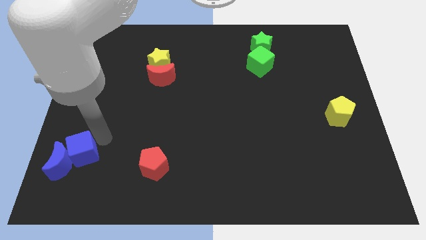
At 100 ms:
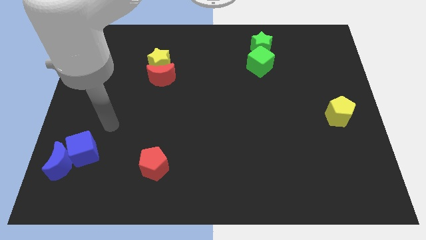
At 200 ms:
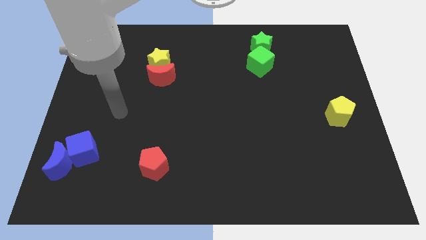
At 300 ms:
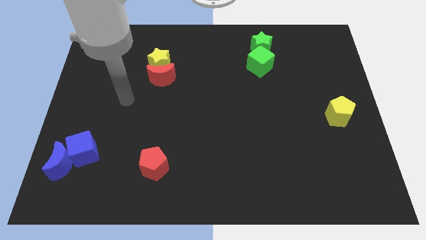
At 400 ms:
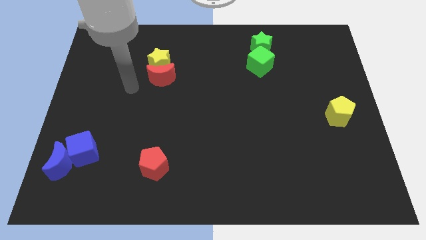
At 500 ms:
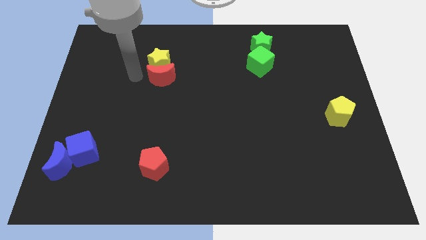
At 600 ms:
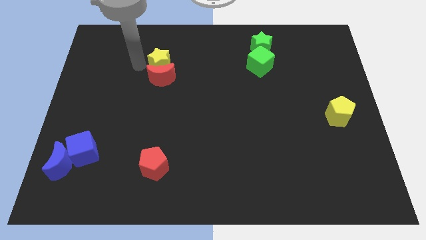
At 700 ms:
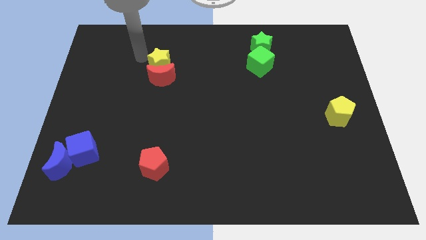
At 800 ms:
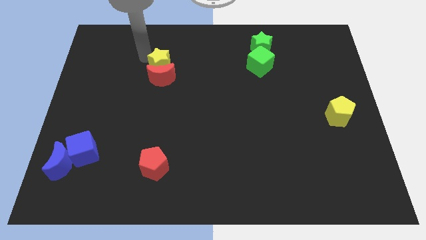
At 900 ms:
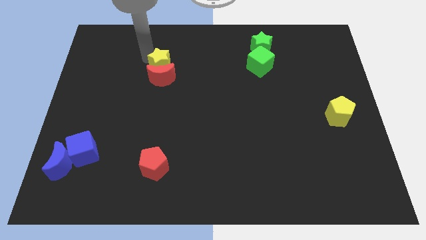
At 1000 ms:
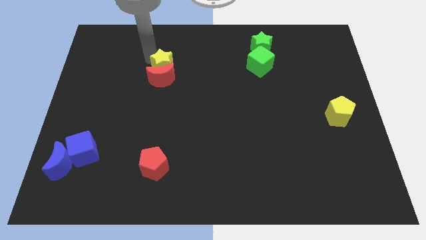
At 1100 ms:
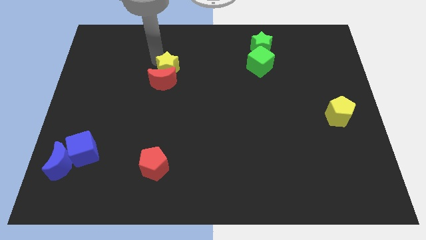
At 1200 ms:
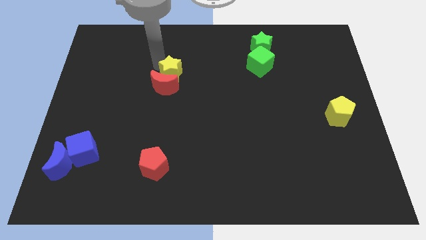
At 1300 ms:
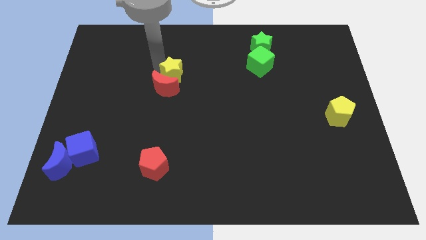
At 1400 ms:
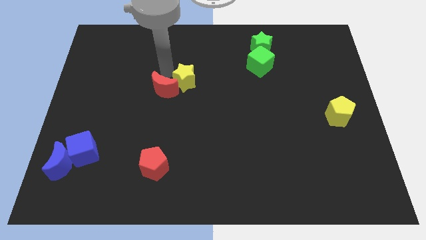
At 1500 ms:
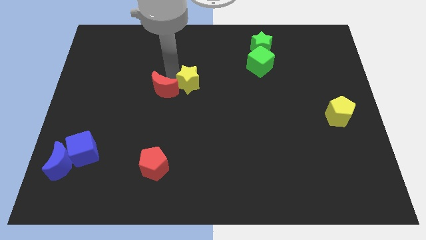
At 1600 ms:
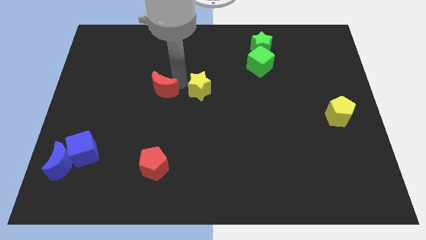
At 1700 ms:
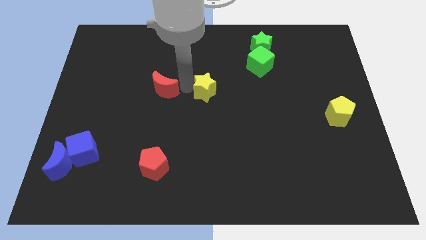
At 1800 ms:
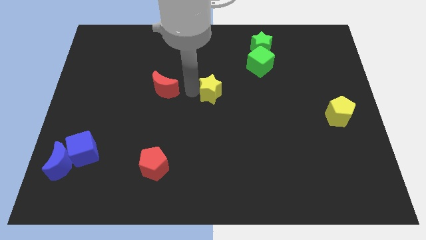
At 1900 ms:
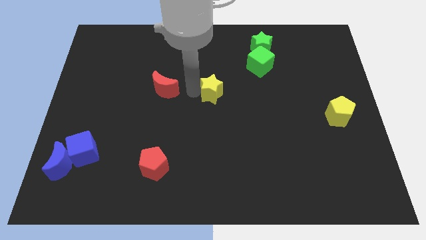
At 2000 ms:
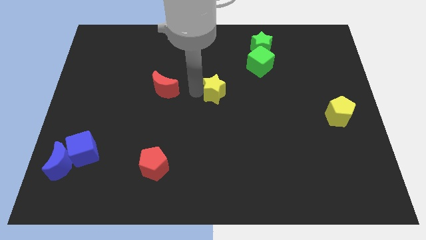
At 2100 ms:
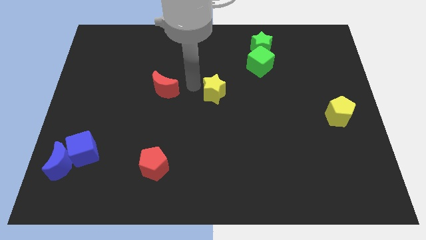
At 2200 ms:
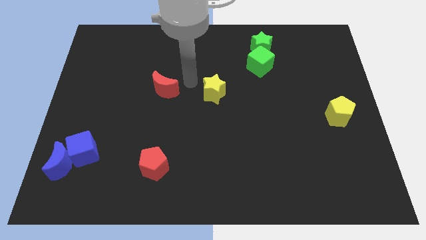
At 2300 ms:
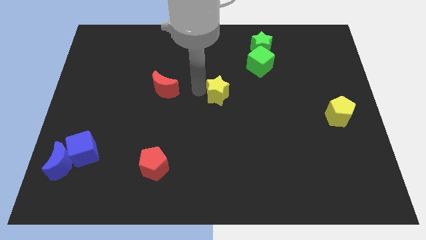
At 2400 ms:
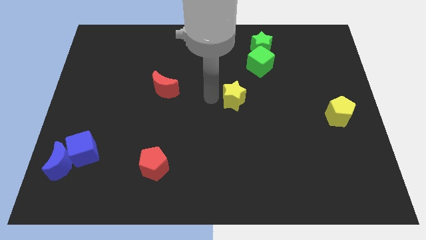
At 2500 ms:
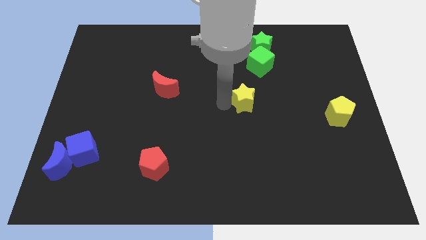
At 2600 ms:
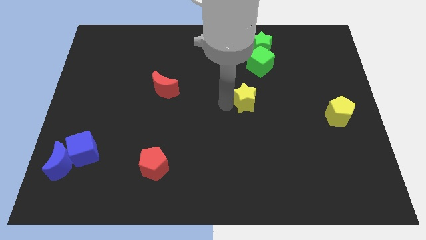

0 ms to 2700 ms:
place the yellow star right to the red moon

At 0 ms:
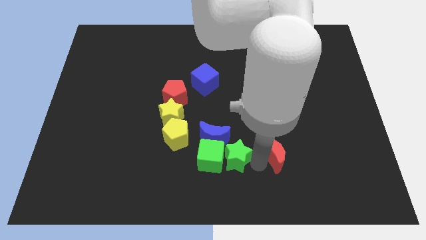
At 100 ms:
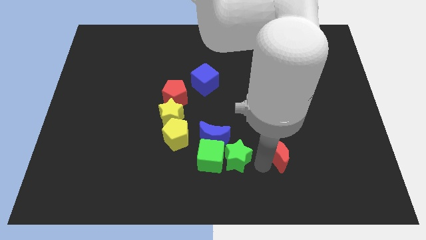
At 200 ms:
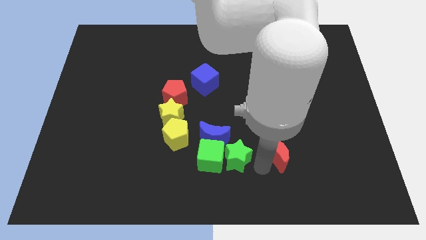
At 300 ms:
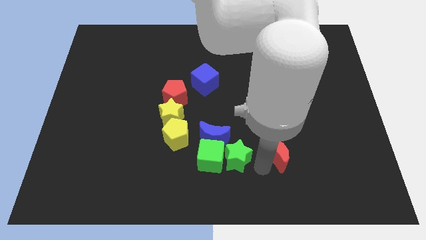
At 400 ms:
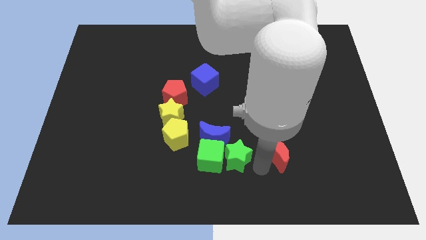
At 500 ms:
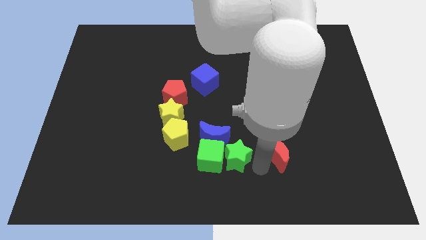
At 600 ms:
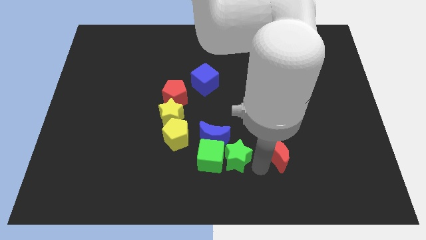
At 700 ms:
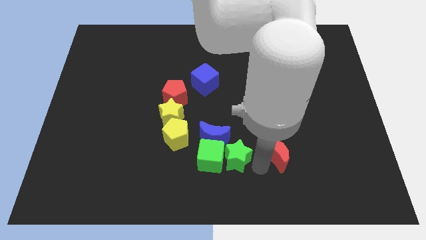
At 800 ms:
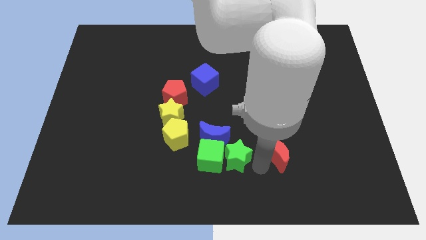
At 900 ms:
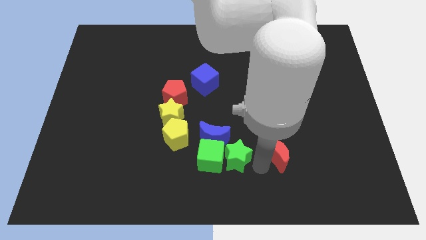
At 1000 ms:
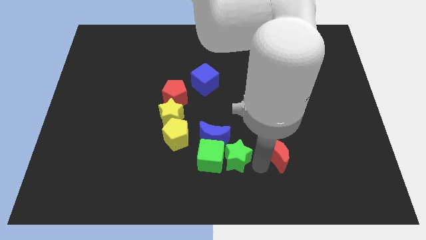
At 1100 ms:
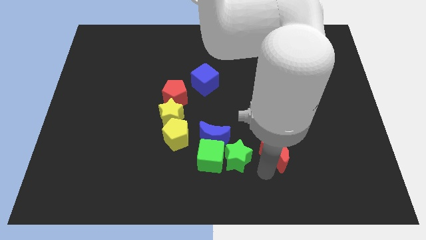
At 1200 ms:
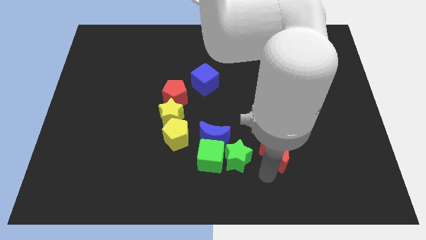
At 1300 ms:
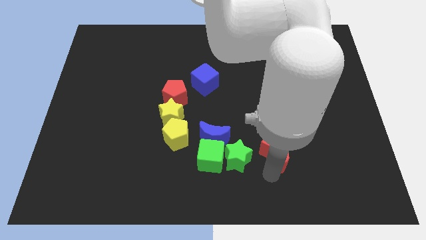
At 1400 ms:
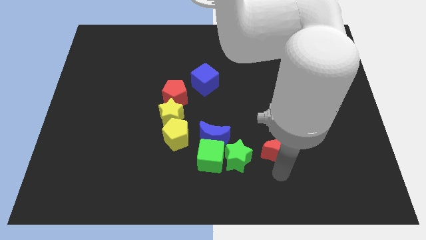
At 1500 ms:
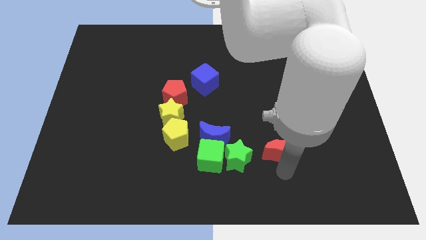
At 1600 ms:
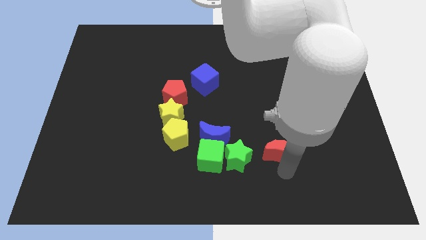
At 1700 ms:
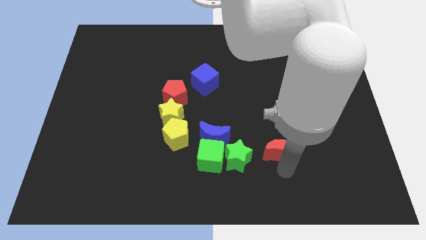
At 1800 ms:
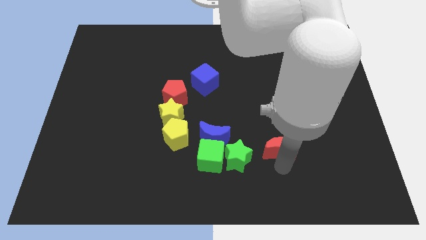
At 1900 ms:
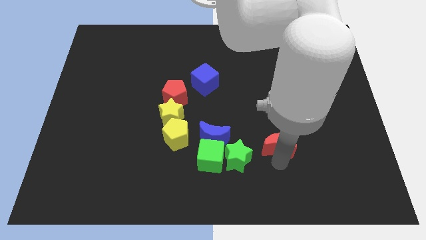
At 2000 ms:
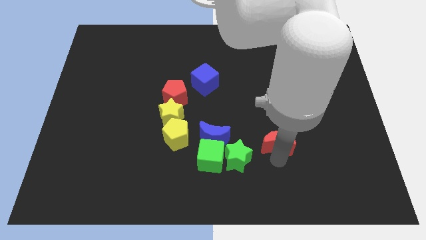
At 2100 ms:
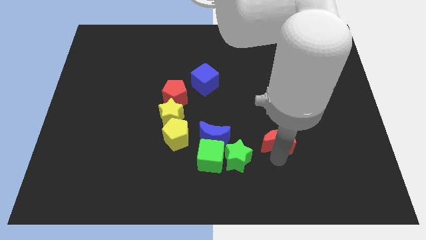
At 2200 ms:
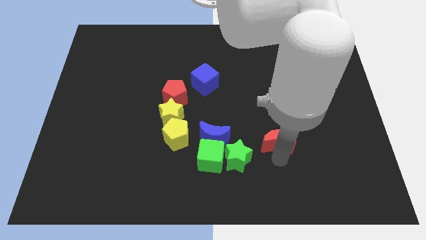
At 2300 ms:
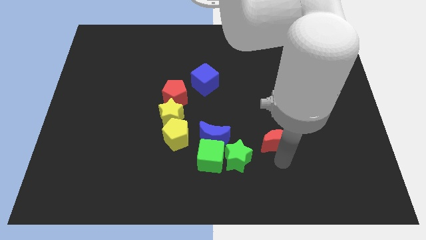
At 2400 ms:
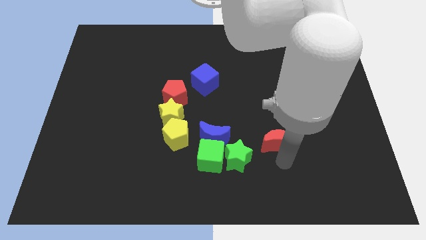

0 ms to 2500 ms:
separate red moon from star

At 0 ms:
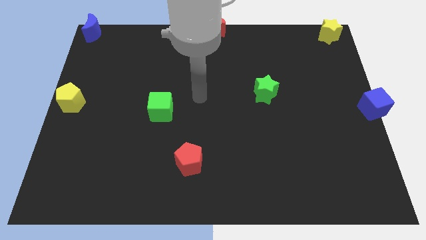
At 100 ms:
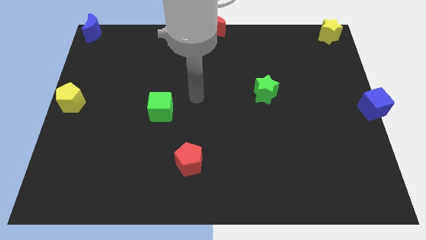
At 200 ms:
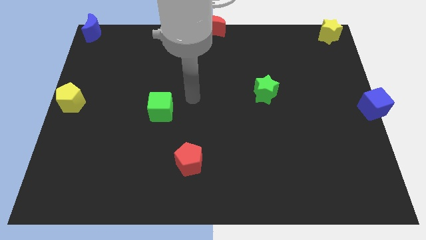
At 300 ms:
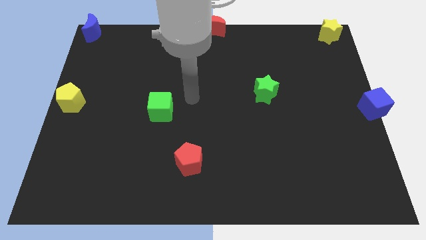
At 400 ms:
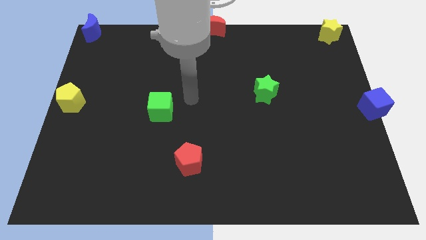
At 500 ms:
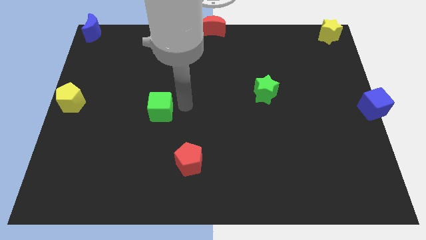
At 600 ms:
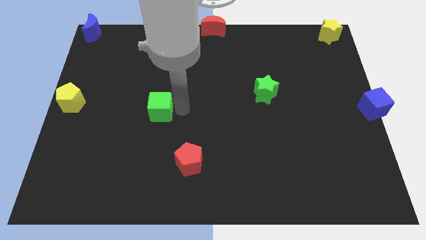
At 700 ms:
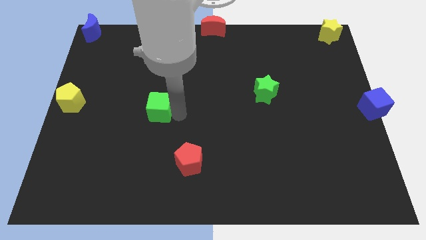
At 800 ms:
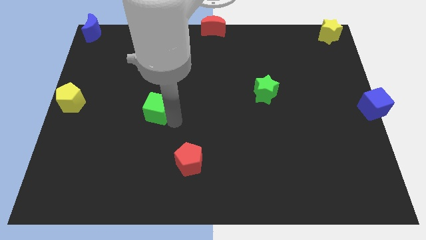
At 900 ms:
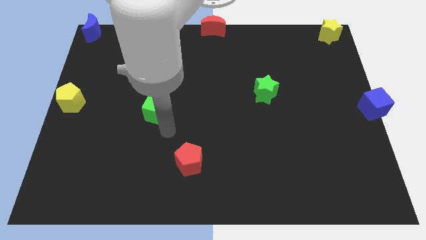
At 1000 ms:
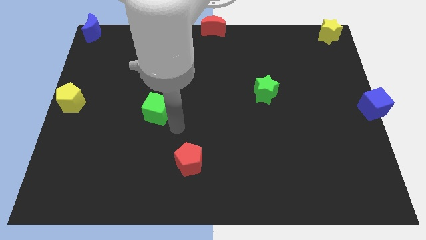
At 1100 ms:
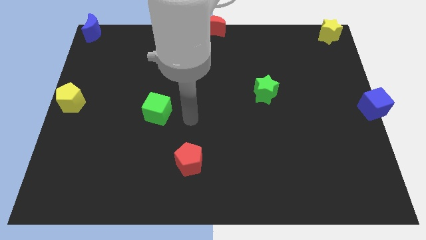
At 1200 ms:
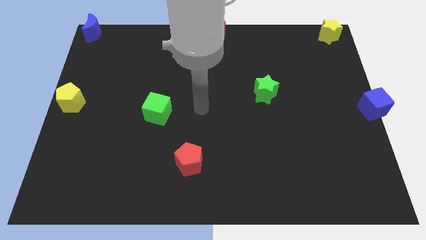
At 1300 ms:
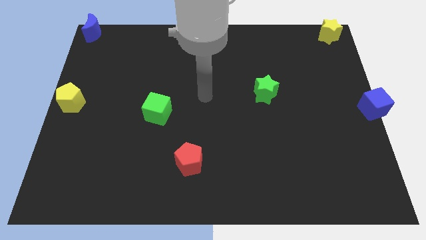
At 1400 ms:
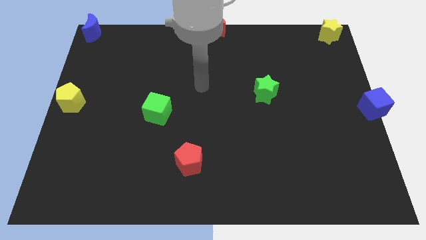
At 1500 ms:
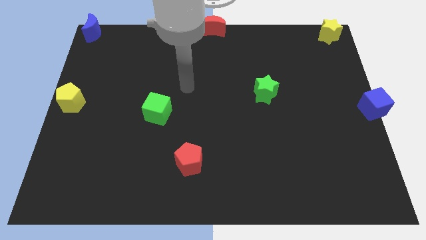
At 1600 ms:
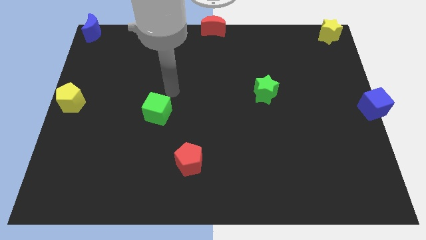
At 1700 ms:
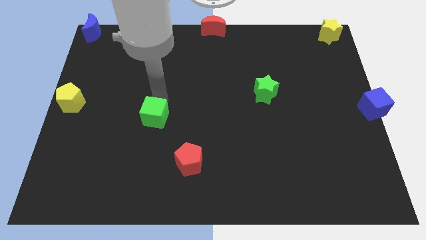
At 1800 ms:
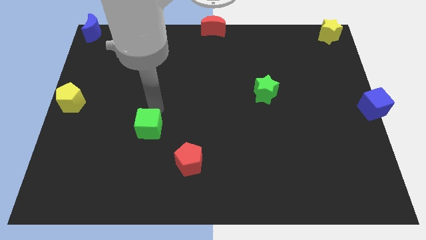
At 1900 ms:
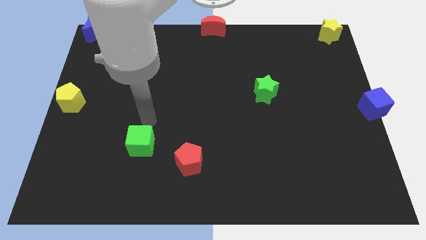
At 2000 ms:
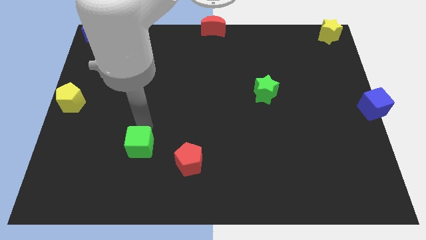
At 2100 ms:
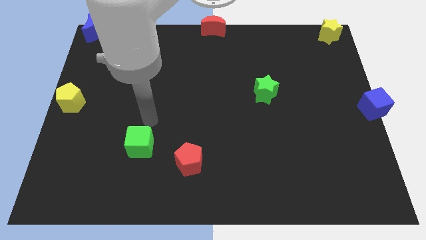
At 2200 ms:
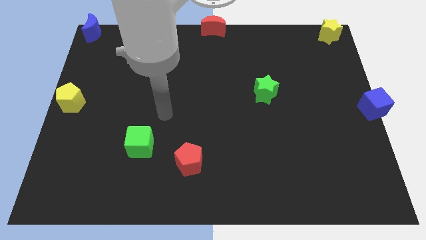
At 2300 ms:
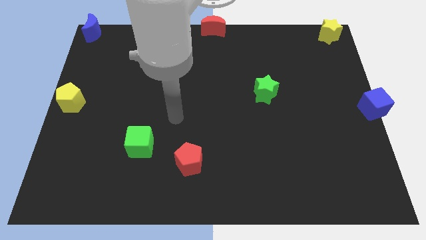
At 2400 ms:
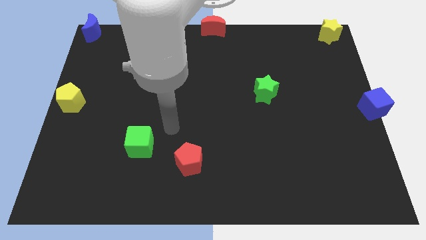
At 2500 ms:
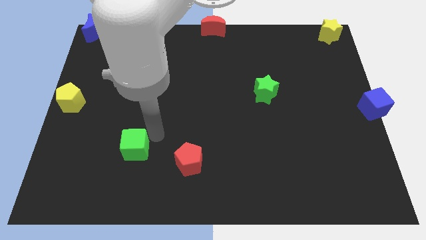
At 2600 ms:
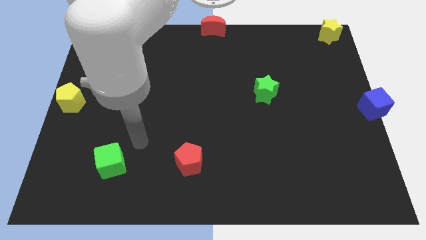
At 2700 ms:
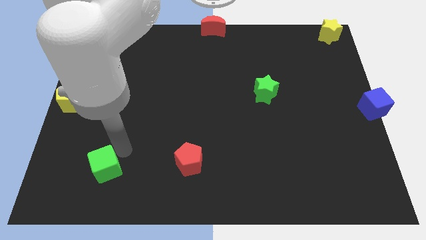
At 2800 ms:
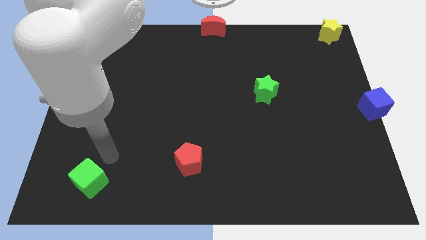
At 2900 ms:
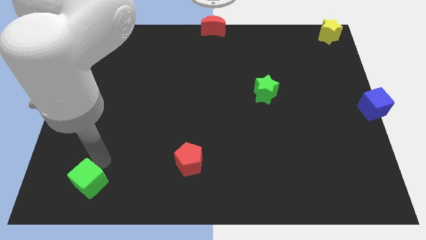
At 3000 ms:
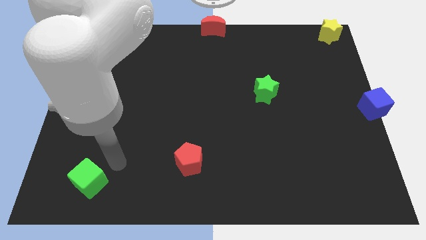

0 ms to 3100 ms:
push green cube towards bottom left

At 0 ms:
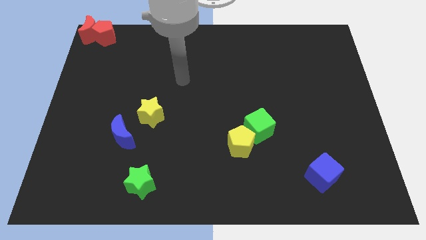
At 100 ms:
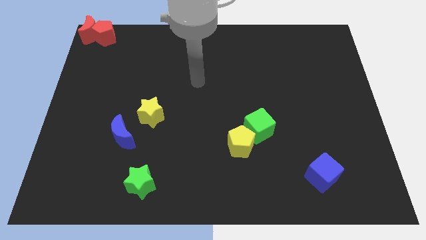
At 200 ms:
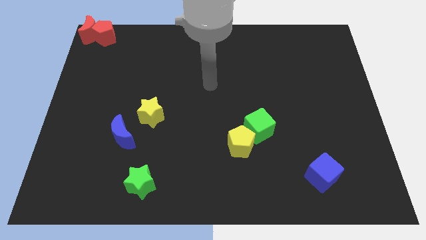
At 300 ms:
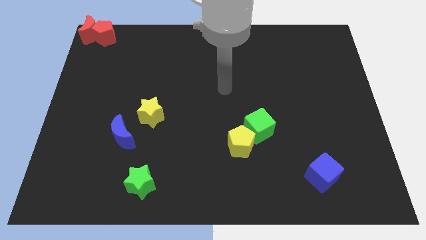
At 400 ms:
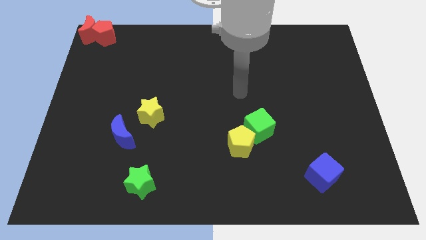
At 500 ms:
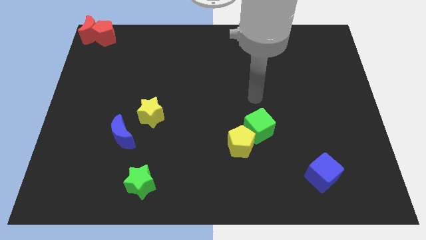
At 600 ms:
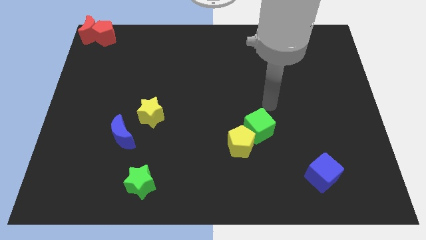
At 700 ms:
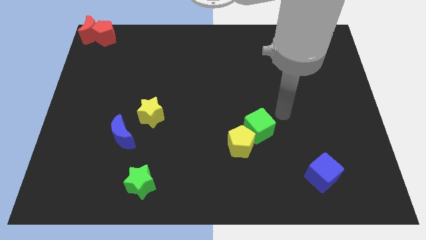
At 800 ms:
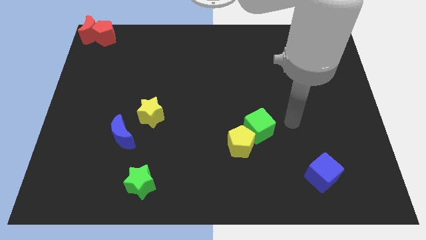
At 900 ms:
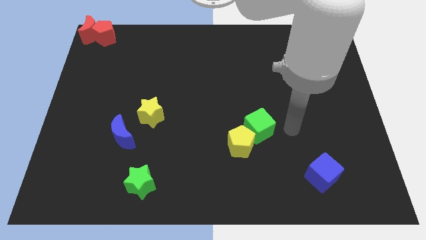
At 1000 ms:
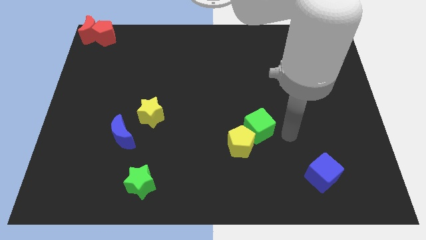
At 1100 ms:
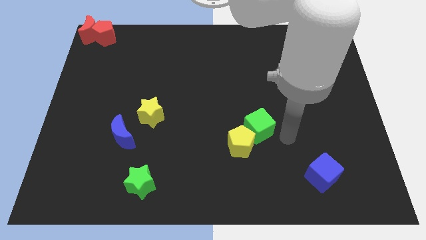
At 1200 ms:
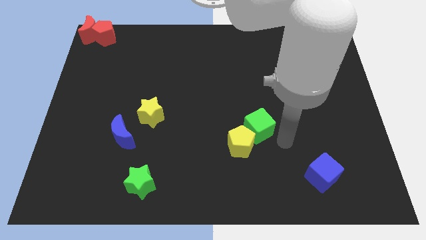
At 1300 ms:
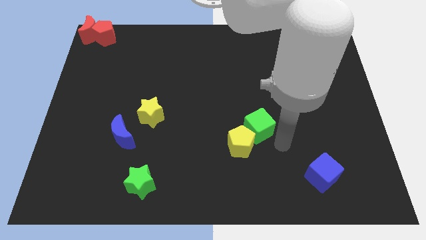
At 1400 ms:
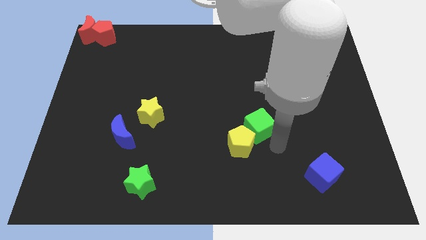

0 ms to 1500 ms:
move your arm below the green cube
